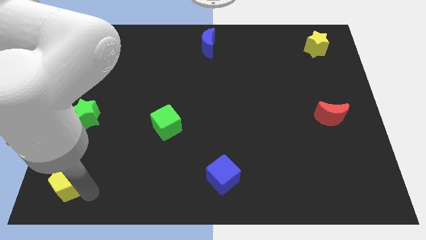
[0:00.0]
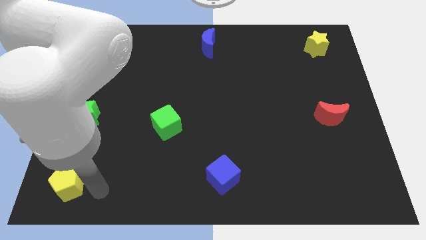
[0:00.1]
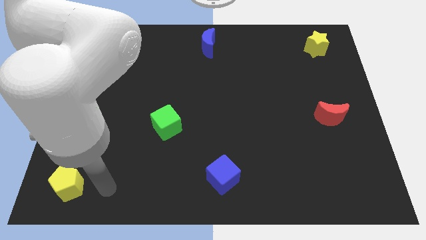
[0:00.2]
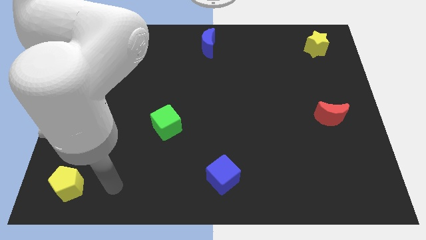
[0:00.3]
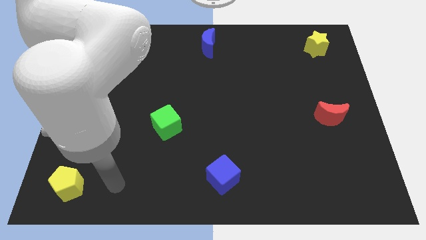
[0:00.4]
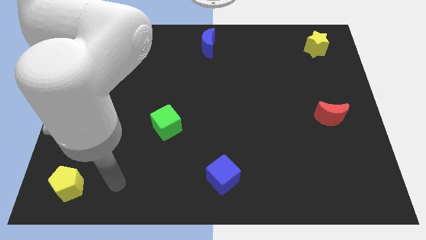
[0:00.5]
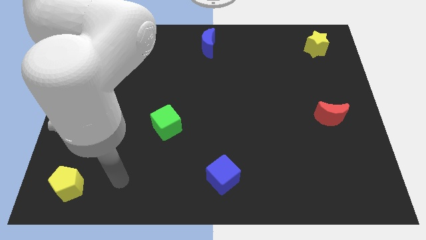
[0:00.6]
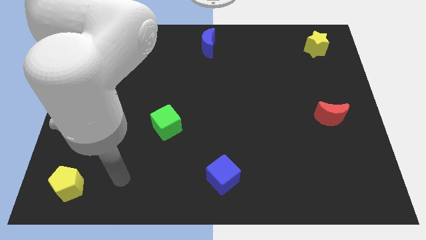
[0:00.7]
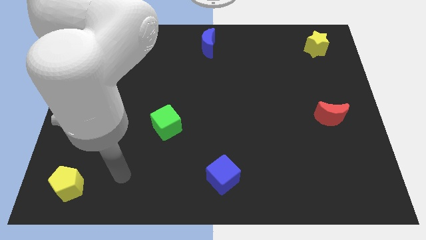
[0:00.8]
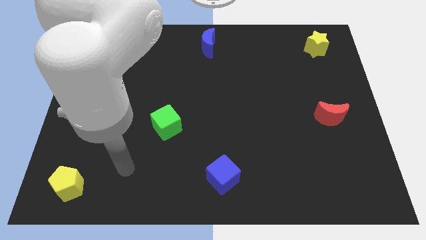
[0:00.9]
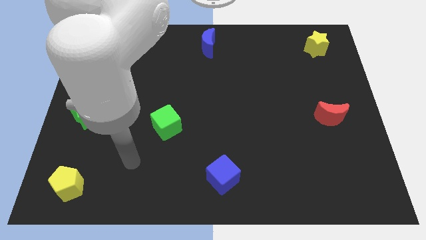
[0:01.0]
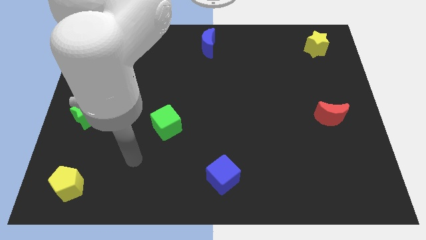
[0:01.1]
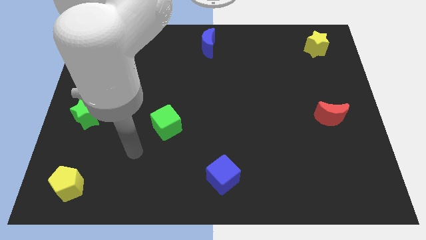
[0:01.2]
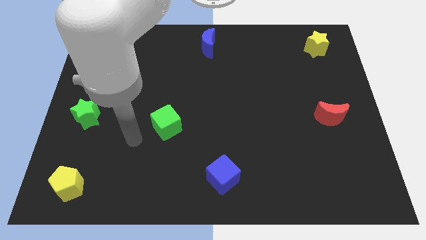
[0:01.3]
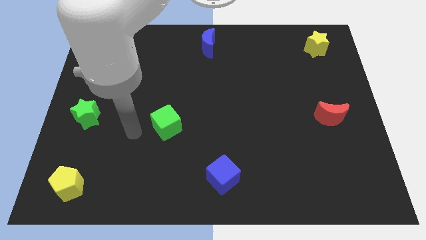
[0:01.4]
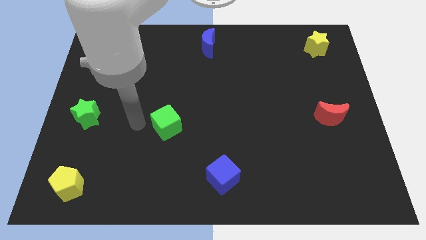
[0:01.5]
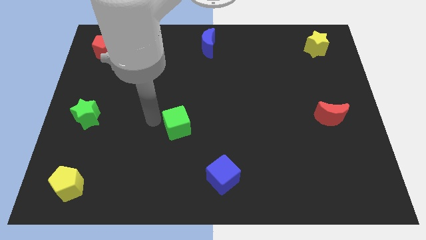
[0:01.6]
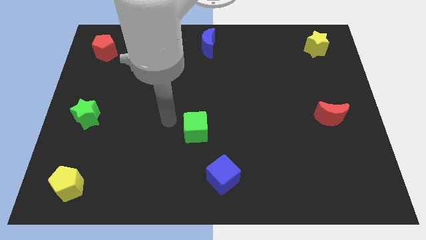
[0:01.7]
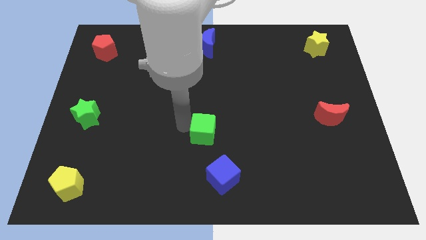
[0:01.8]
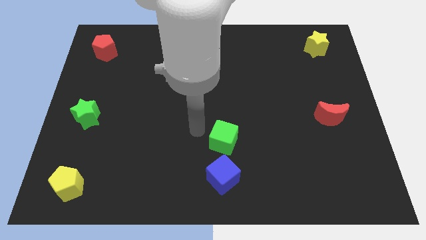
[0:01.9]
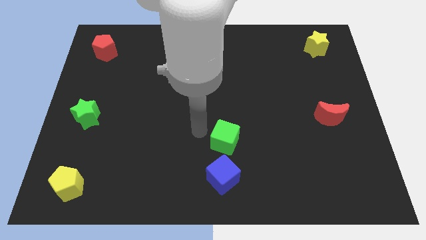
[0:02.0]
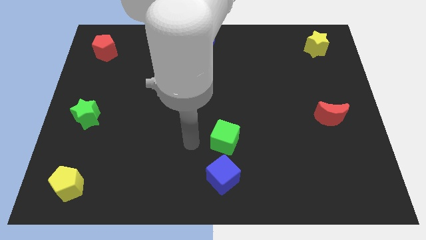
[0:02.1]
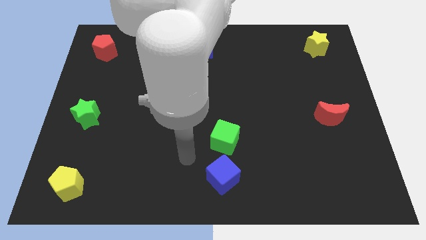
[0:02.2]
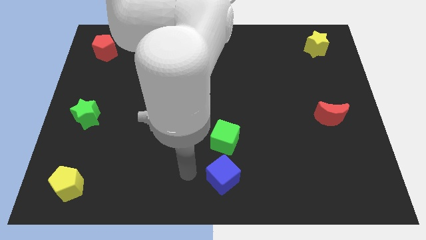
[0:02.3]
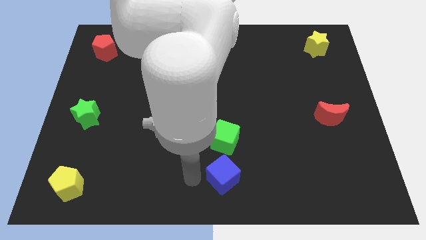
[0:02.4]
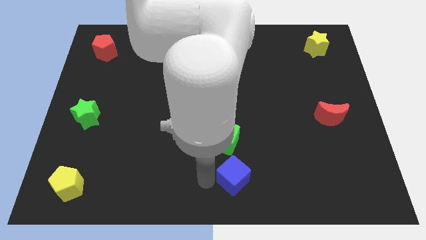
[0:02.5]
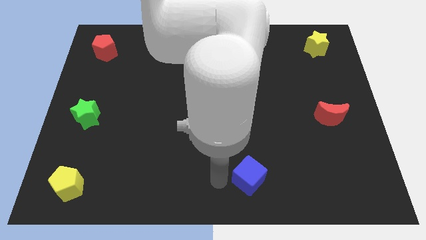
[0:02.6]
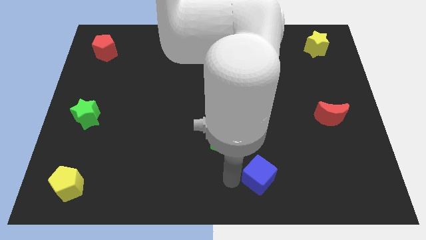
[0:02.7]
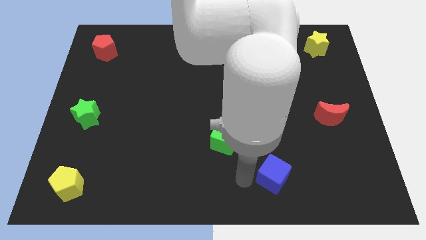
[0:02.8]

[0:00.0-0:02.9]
move your arm away from the yellow pentagon

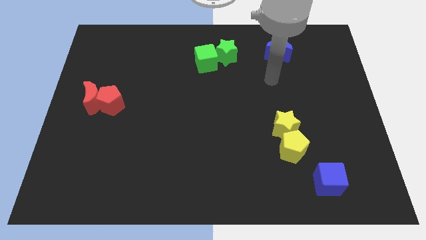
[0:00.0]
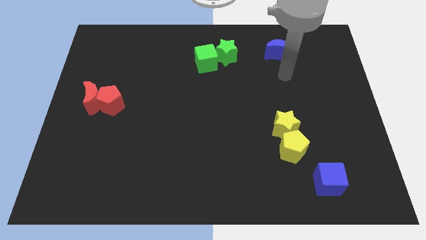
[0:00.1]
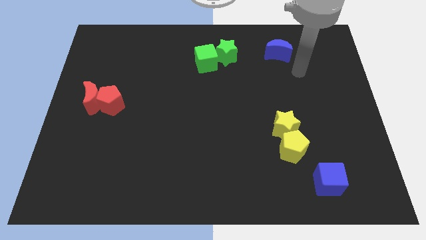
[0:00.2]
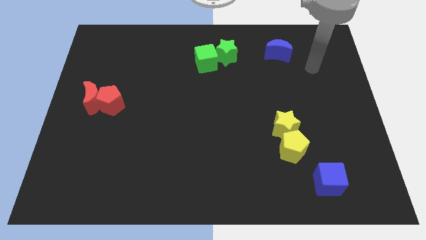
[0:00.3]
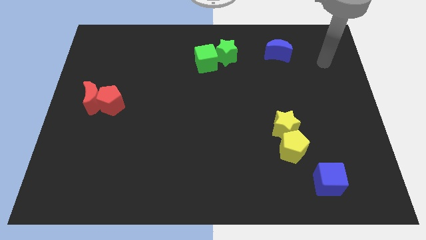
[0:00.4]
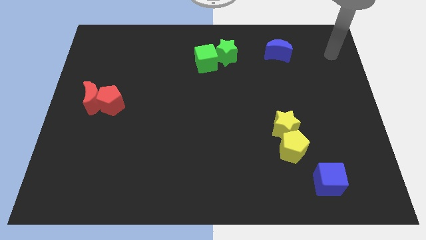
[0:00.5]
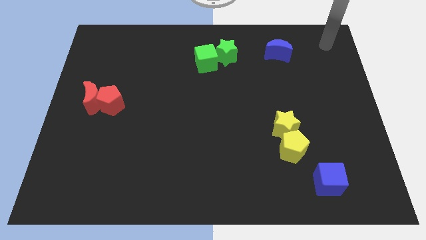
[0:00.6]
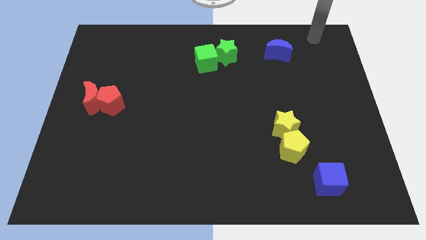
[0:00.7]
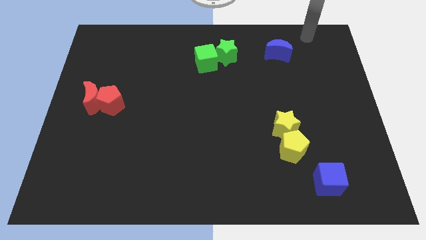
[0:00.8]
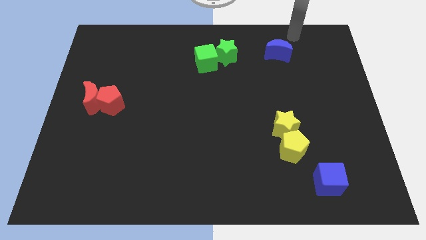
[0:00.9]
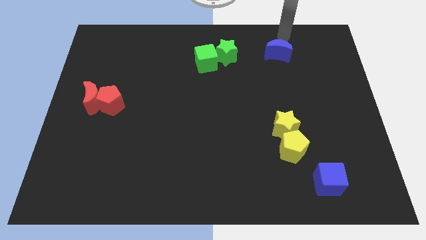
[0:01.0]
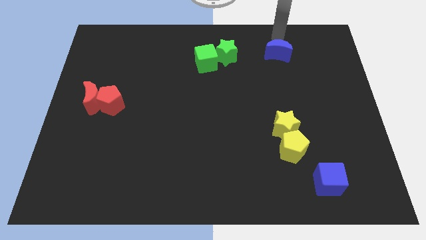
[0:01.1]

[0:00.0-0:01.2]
place your hand above the blue crescent

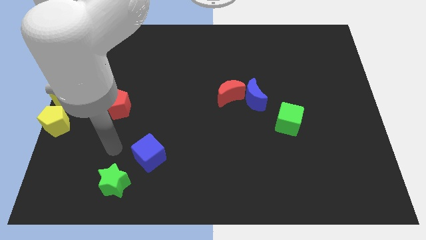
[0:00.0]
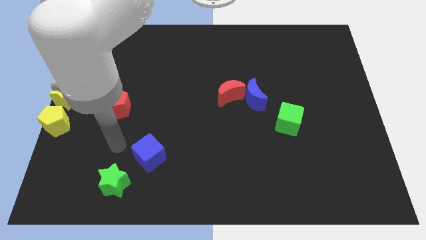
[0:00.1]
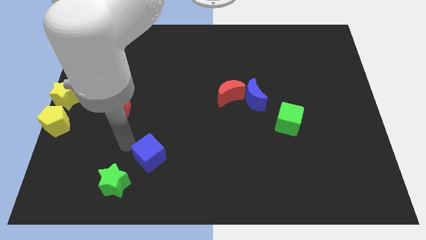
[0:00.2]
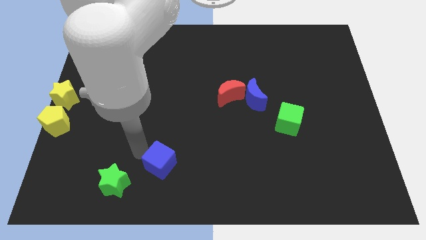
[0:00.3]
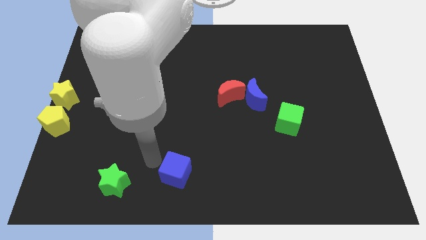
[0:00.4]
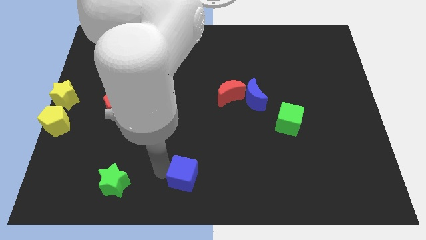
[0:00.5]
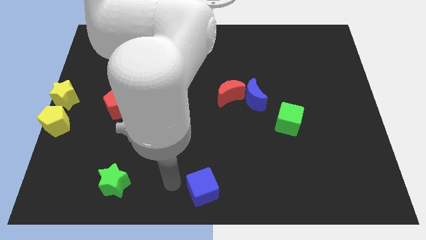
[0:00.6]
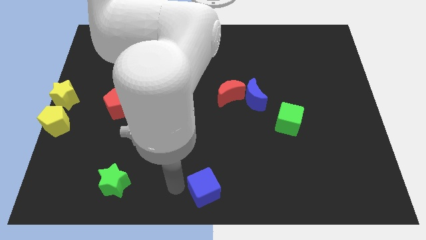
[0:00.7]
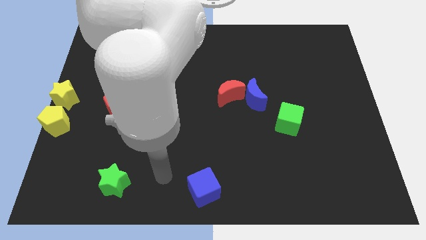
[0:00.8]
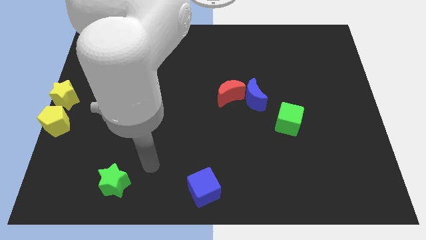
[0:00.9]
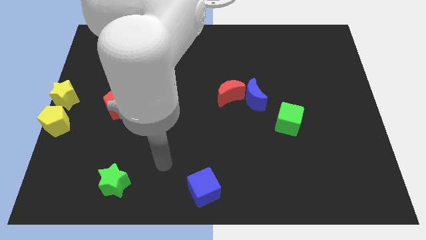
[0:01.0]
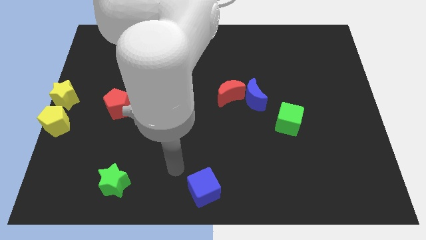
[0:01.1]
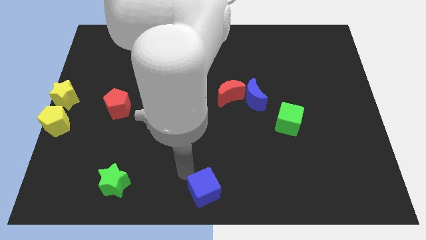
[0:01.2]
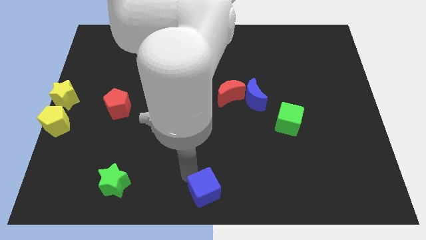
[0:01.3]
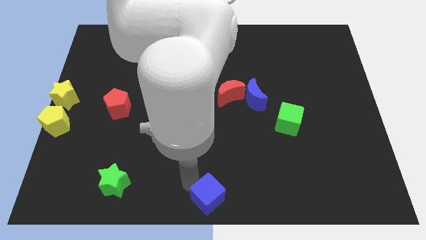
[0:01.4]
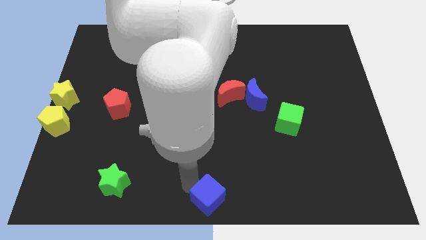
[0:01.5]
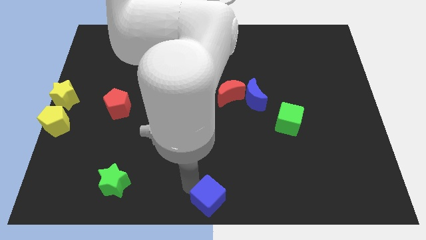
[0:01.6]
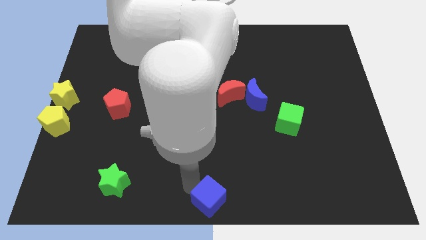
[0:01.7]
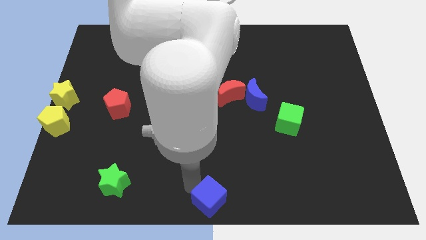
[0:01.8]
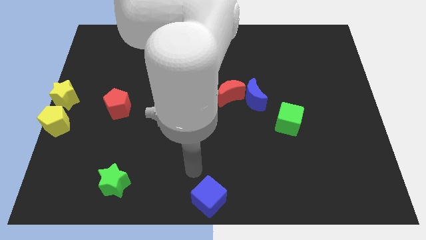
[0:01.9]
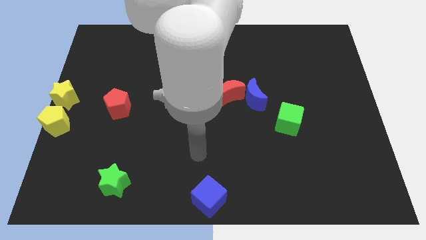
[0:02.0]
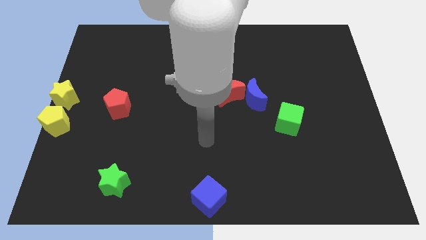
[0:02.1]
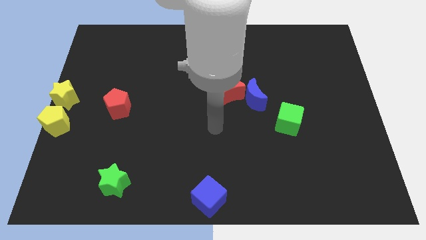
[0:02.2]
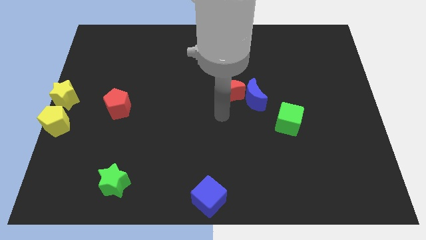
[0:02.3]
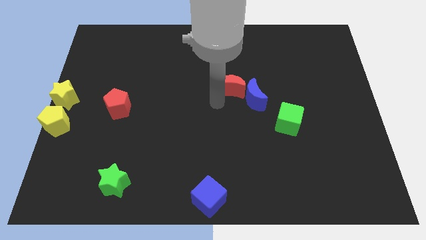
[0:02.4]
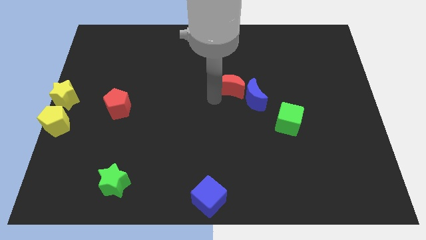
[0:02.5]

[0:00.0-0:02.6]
move blue cube to the bottom middle of the board

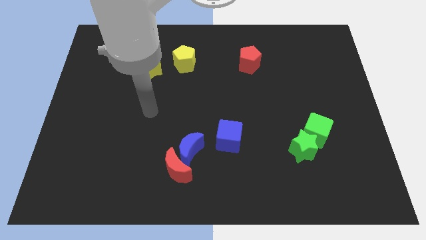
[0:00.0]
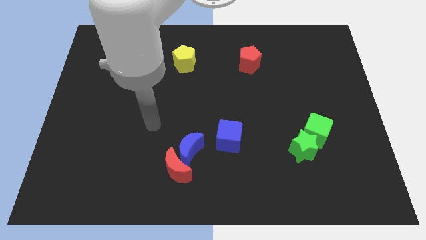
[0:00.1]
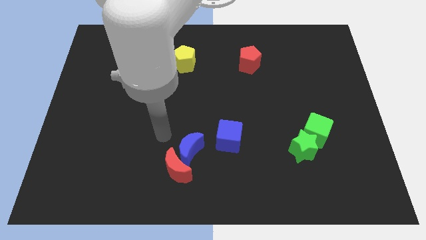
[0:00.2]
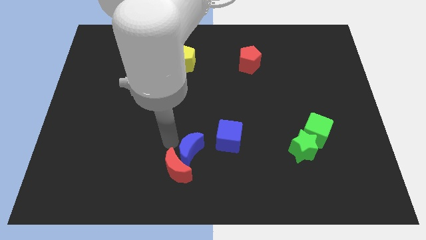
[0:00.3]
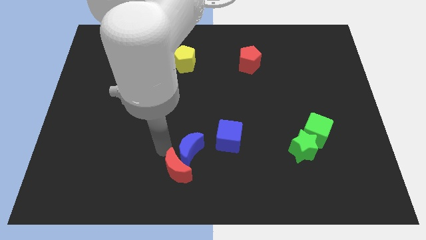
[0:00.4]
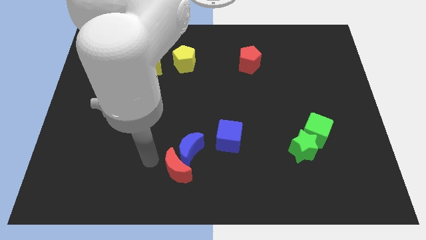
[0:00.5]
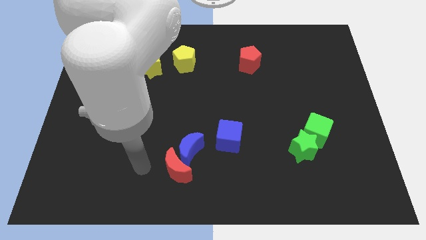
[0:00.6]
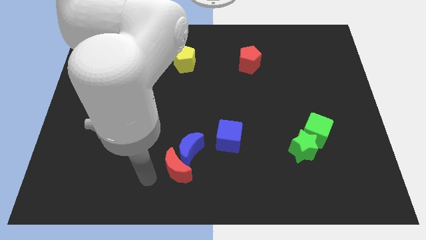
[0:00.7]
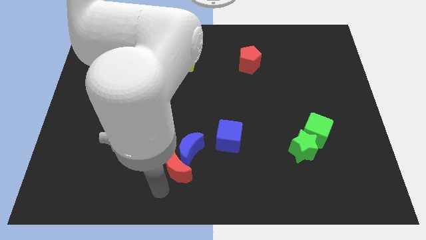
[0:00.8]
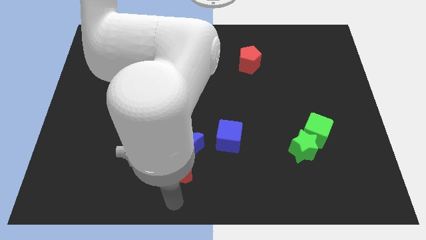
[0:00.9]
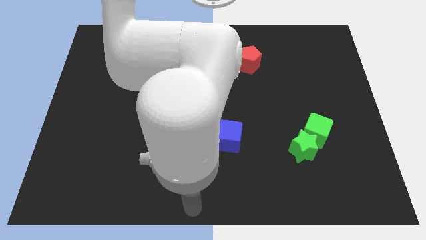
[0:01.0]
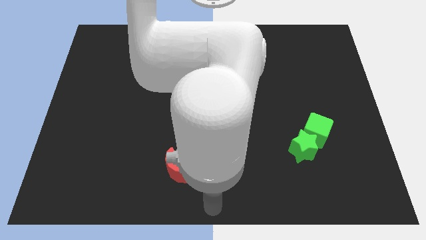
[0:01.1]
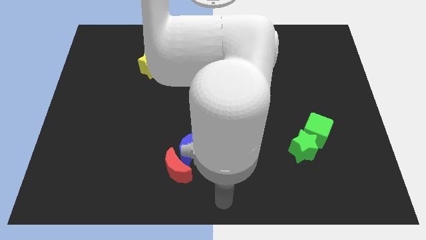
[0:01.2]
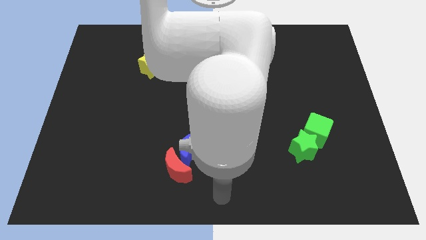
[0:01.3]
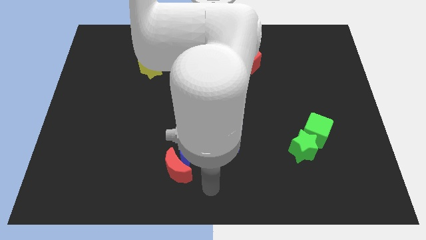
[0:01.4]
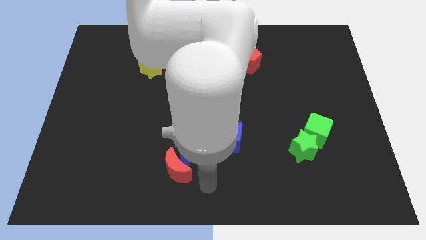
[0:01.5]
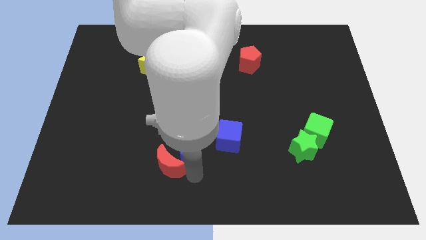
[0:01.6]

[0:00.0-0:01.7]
move your arm towards the red crescent

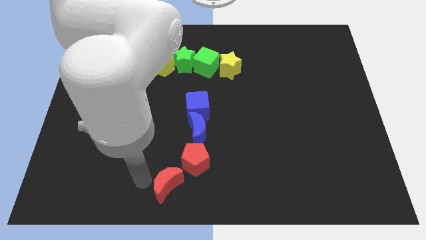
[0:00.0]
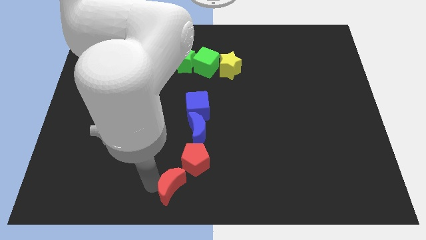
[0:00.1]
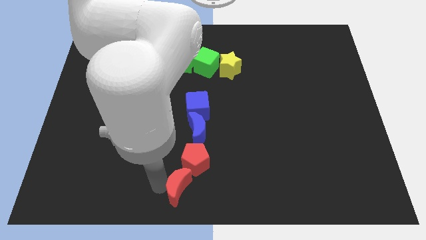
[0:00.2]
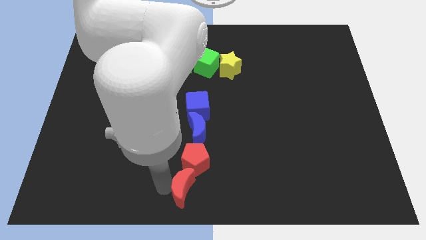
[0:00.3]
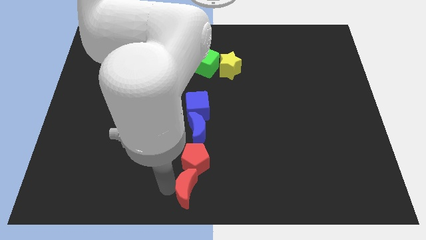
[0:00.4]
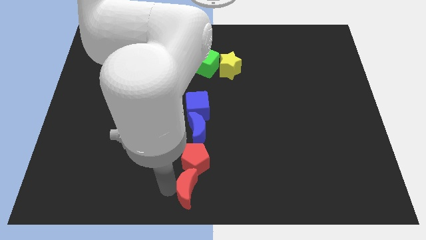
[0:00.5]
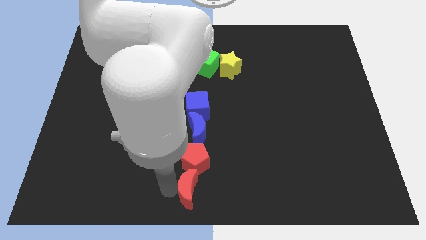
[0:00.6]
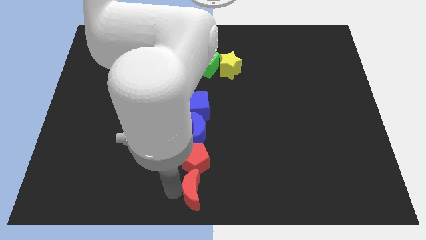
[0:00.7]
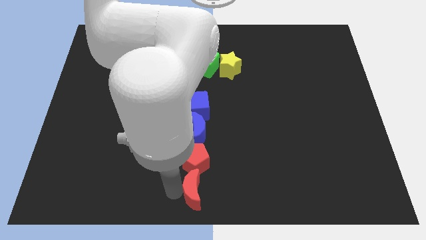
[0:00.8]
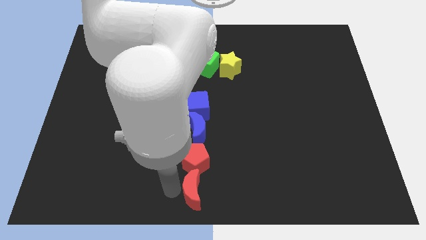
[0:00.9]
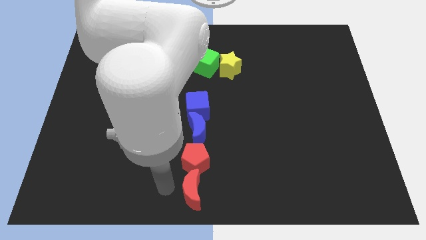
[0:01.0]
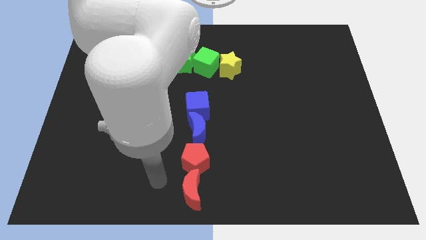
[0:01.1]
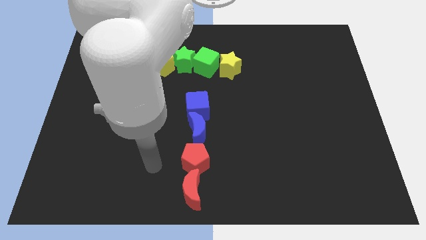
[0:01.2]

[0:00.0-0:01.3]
move red crescent down to the red pentagon
